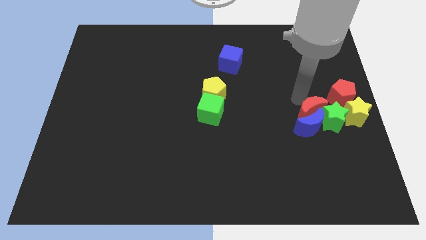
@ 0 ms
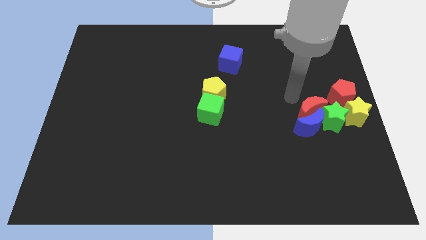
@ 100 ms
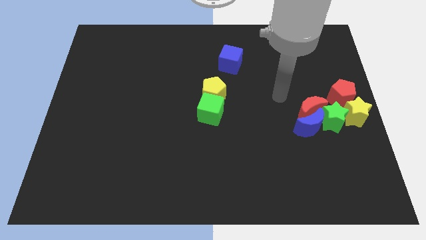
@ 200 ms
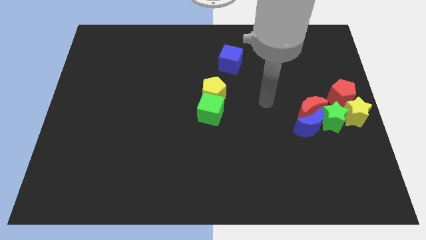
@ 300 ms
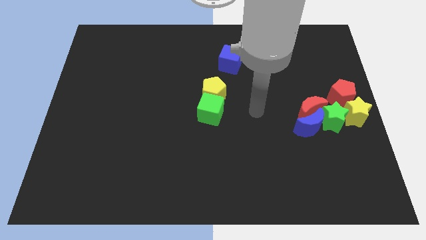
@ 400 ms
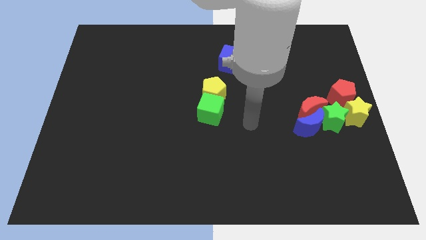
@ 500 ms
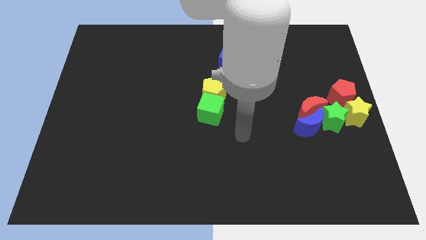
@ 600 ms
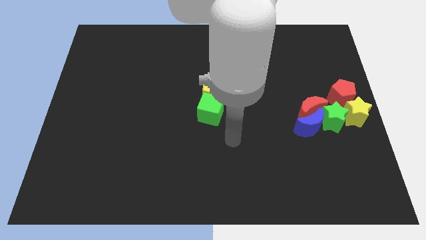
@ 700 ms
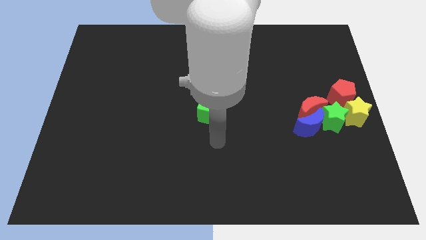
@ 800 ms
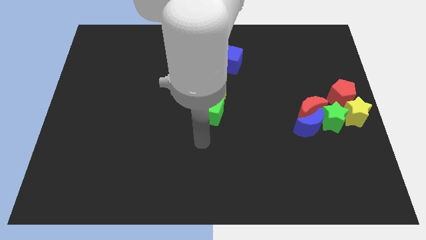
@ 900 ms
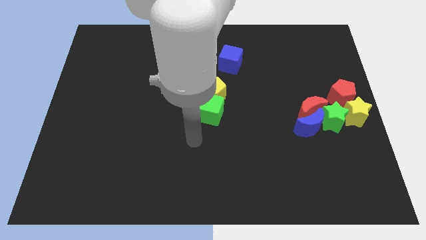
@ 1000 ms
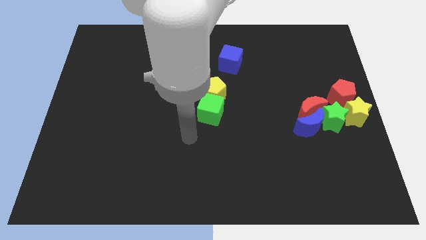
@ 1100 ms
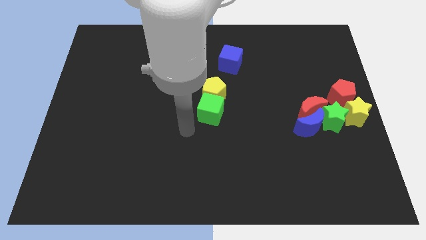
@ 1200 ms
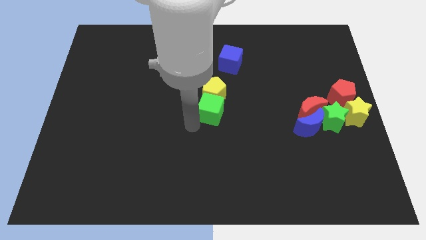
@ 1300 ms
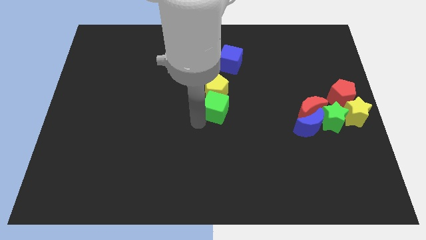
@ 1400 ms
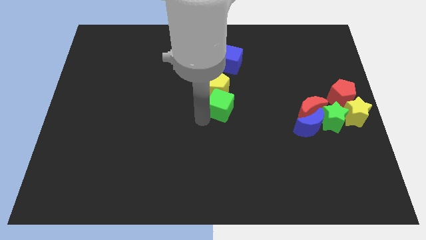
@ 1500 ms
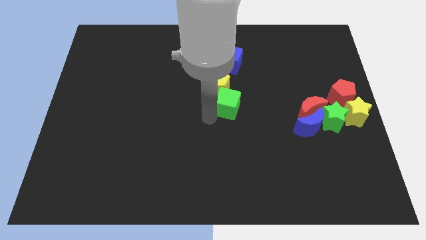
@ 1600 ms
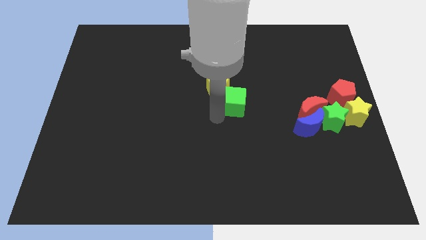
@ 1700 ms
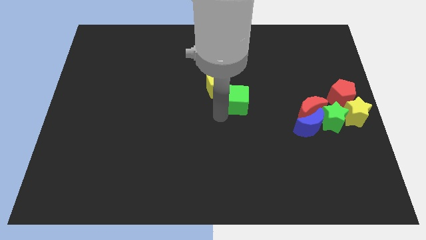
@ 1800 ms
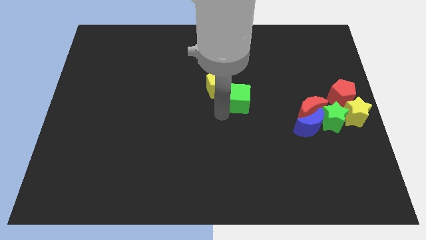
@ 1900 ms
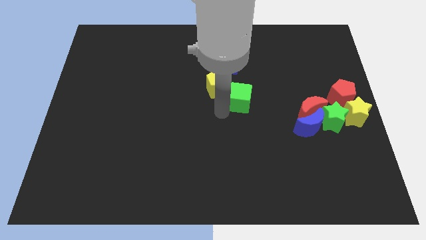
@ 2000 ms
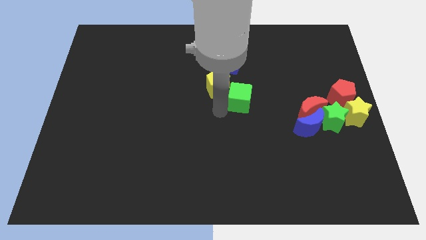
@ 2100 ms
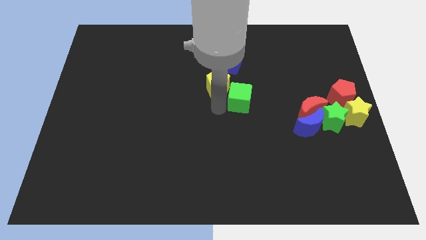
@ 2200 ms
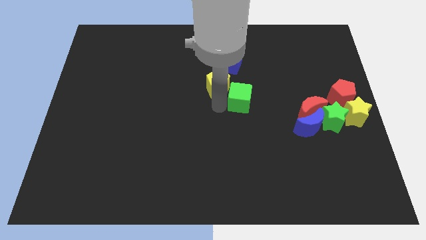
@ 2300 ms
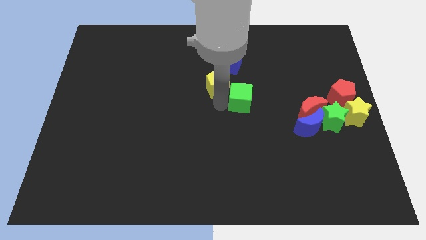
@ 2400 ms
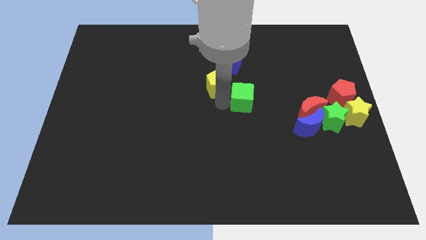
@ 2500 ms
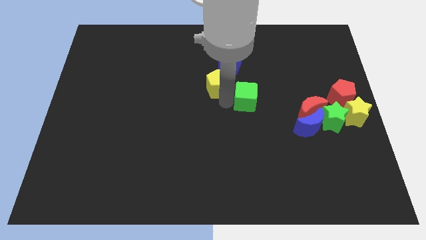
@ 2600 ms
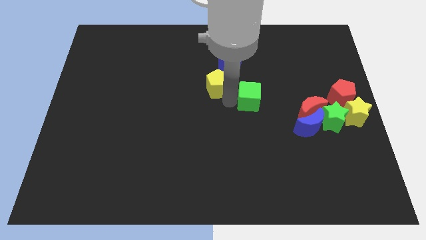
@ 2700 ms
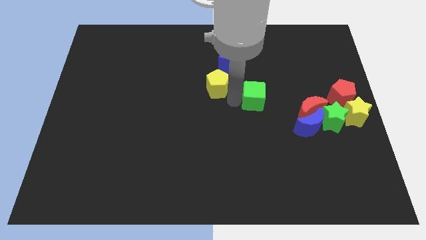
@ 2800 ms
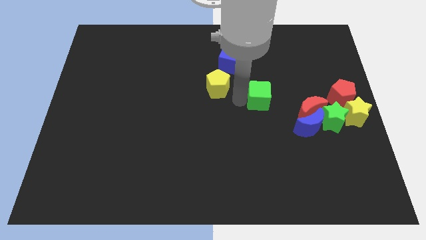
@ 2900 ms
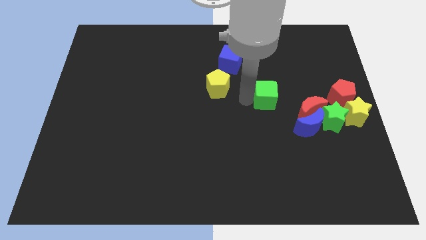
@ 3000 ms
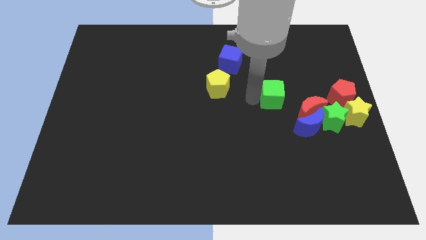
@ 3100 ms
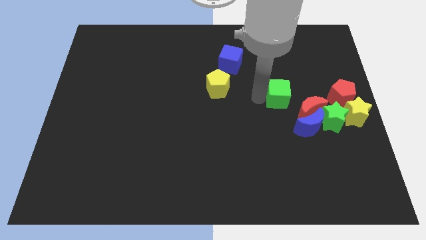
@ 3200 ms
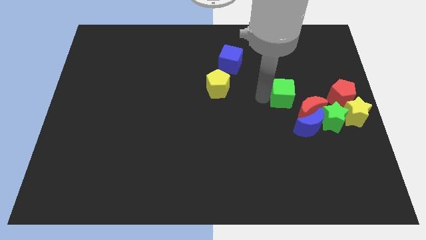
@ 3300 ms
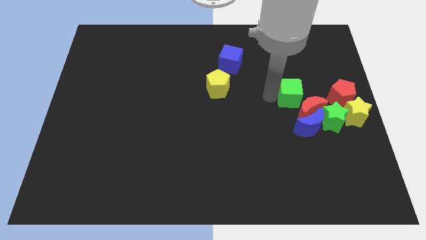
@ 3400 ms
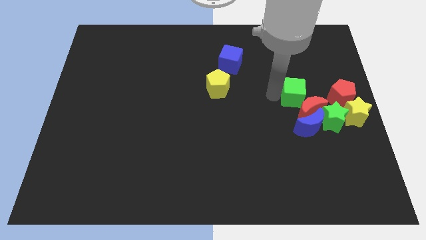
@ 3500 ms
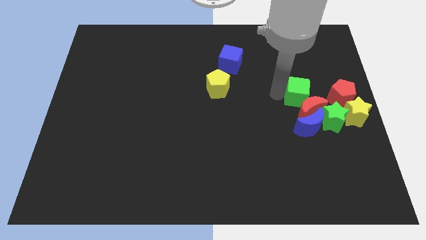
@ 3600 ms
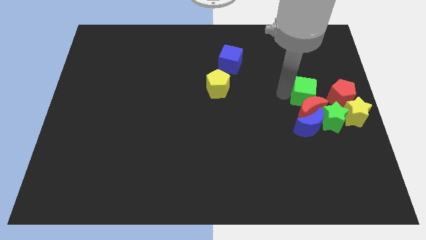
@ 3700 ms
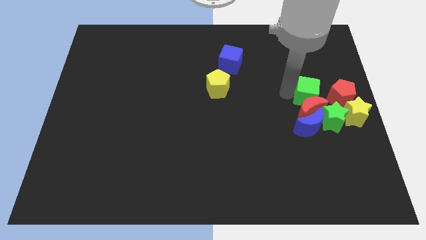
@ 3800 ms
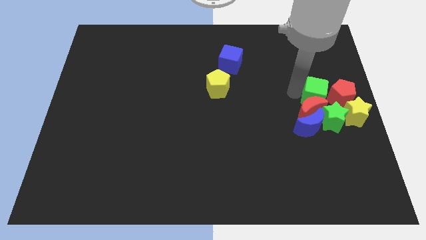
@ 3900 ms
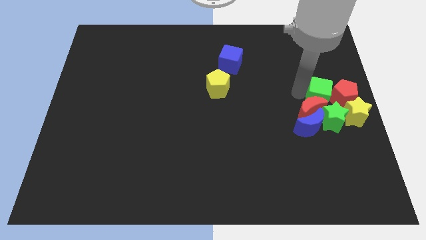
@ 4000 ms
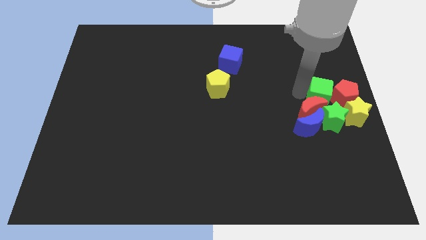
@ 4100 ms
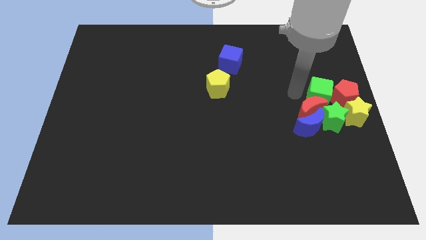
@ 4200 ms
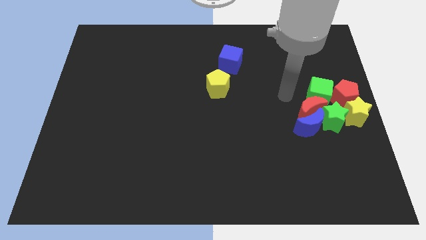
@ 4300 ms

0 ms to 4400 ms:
push green cube into red pentagon

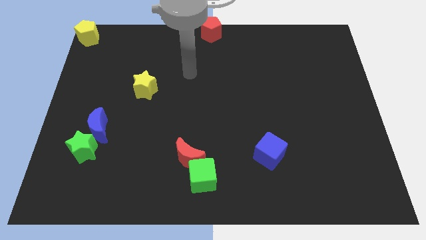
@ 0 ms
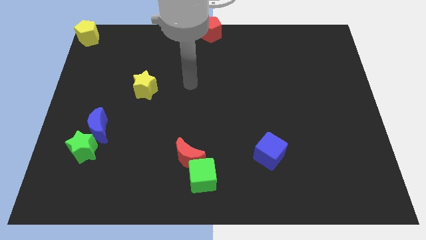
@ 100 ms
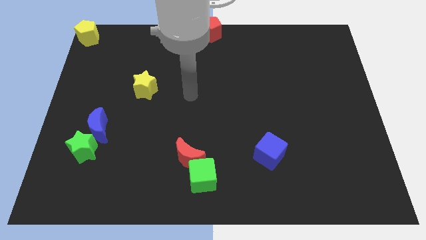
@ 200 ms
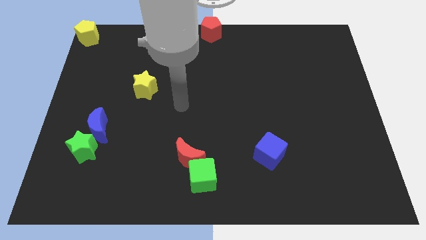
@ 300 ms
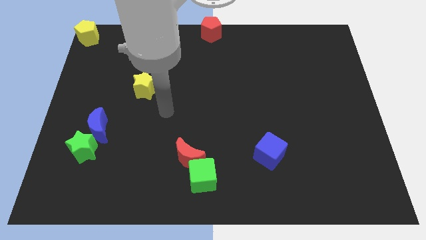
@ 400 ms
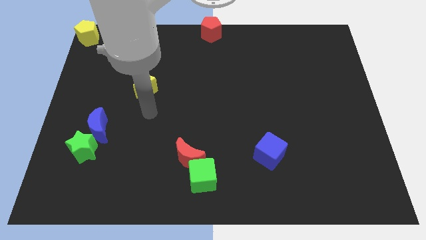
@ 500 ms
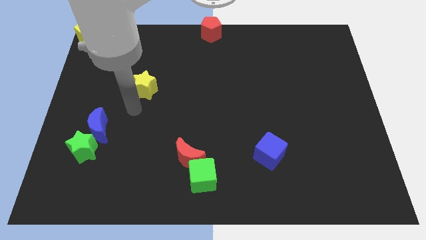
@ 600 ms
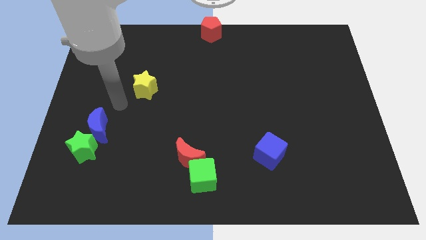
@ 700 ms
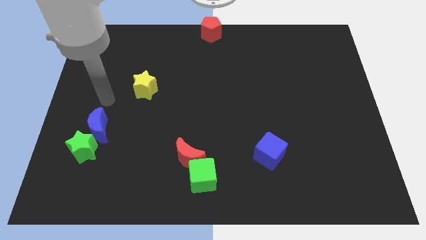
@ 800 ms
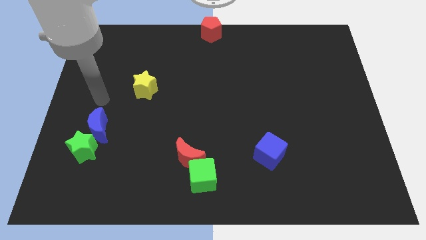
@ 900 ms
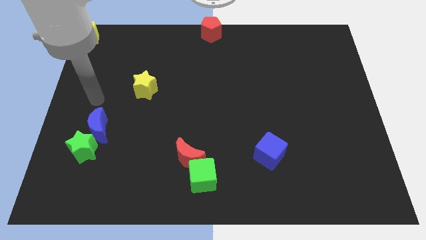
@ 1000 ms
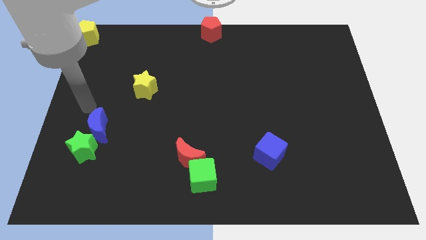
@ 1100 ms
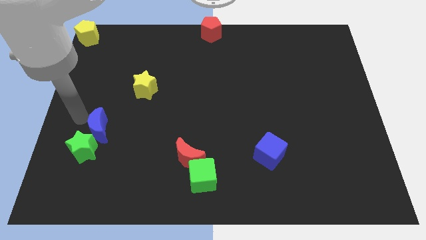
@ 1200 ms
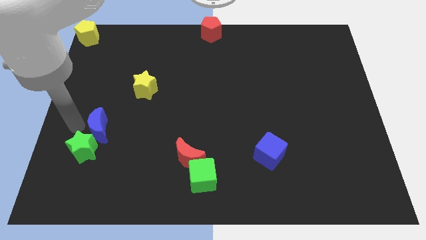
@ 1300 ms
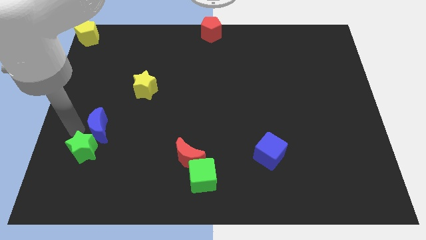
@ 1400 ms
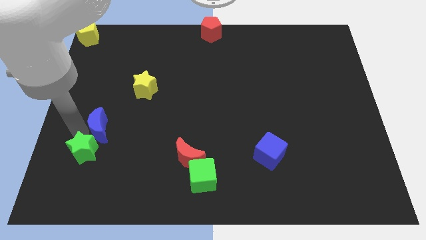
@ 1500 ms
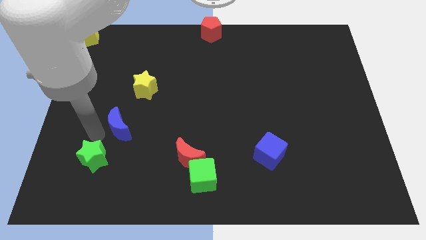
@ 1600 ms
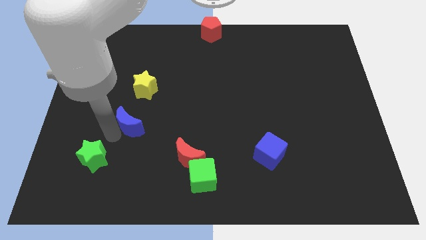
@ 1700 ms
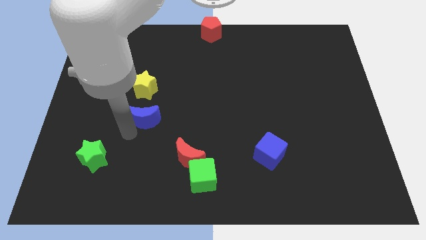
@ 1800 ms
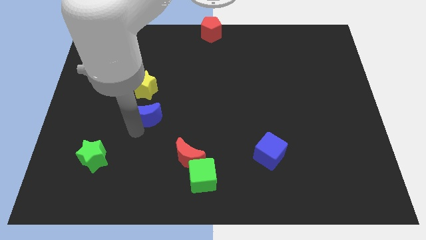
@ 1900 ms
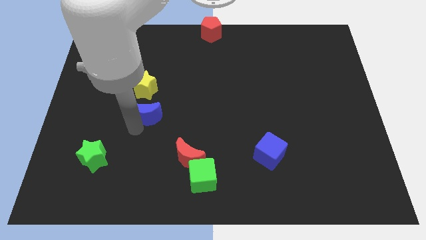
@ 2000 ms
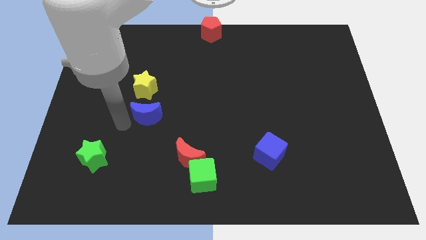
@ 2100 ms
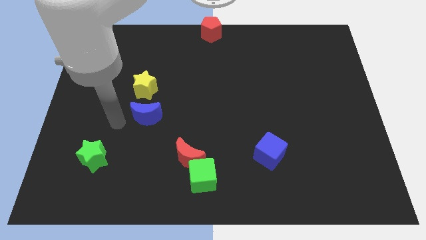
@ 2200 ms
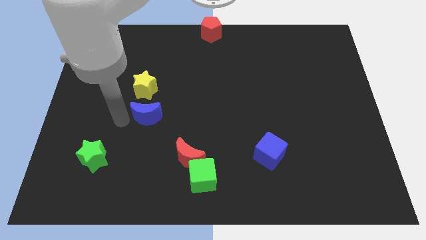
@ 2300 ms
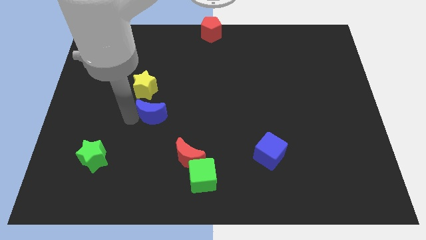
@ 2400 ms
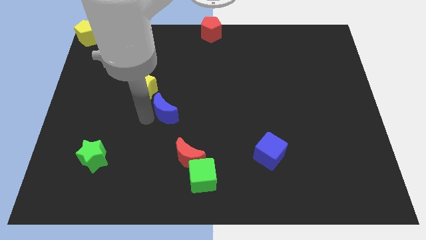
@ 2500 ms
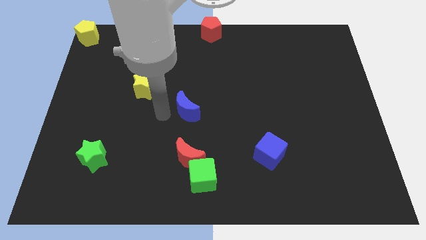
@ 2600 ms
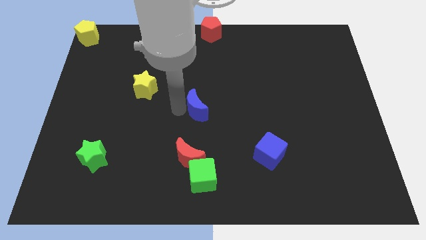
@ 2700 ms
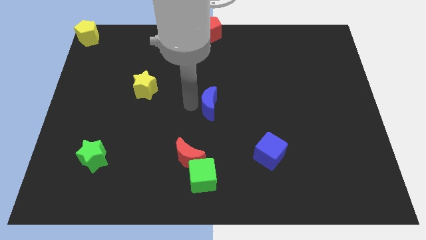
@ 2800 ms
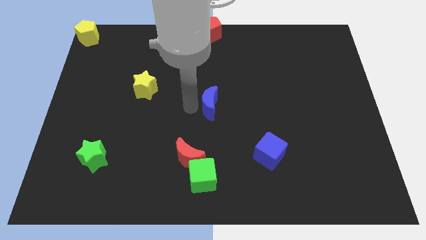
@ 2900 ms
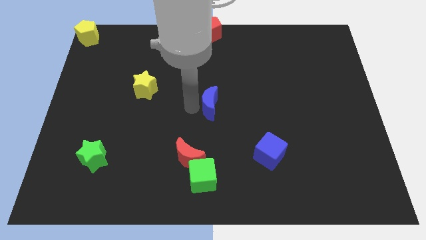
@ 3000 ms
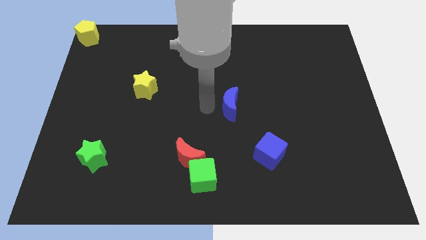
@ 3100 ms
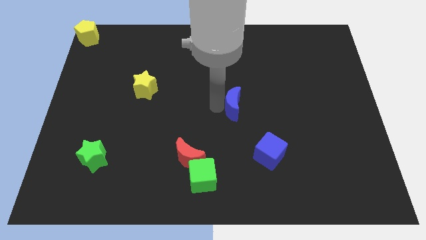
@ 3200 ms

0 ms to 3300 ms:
separate blue moon and the green star

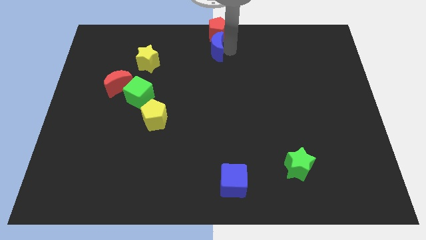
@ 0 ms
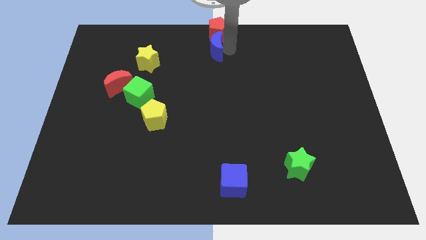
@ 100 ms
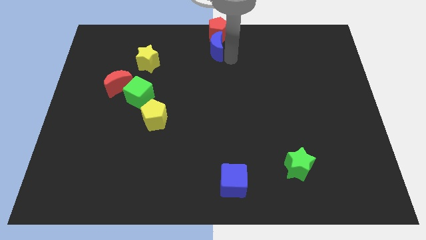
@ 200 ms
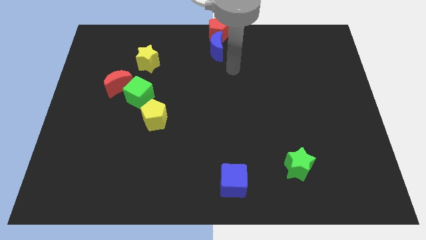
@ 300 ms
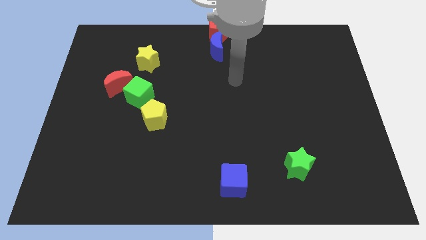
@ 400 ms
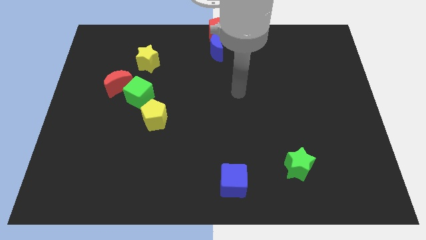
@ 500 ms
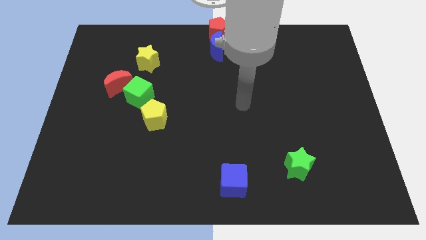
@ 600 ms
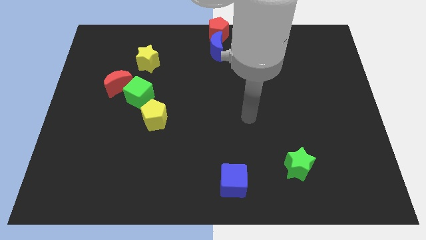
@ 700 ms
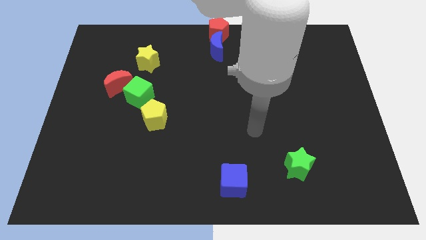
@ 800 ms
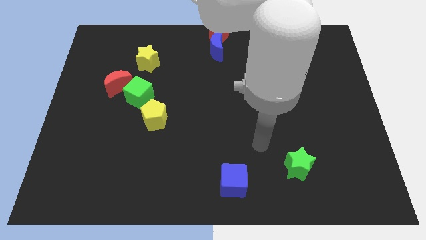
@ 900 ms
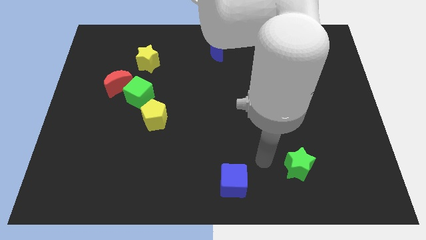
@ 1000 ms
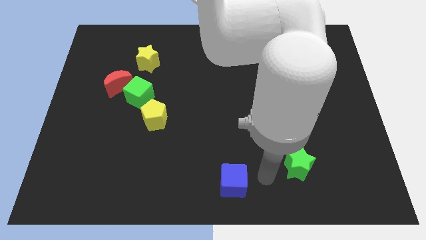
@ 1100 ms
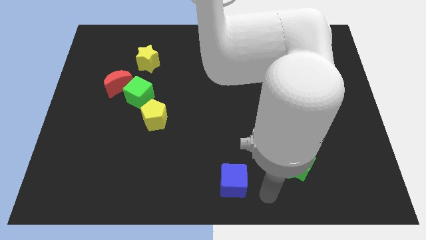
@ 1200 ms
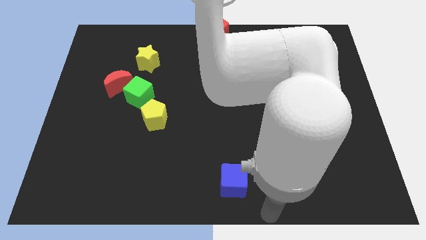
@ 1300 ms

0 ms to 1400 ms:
move the arm away from the blue moon
